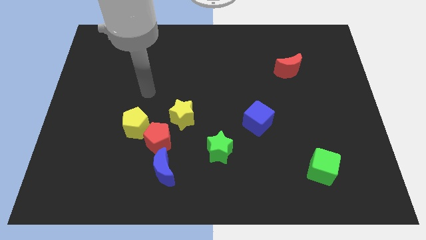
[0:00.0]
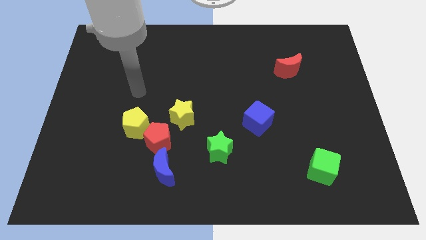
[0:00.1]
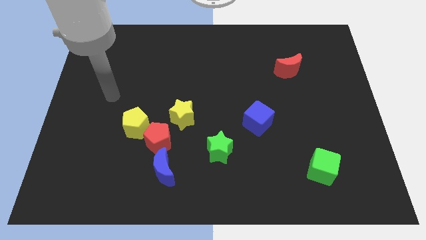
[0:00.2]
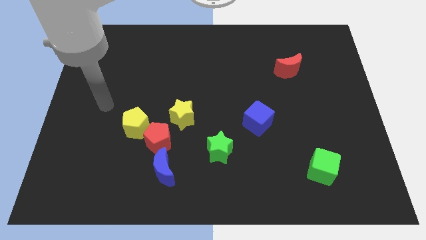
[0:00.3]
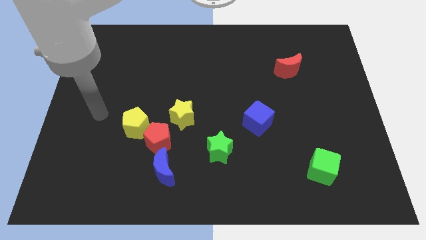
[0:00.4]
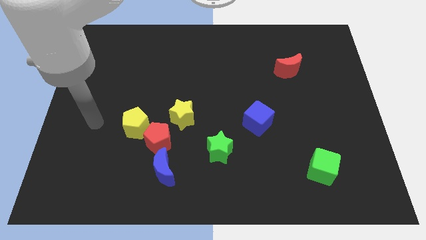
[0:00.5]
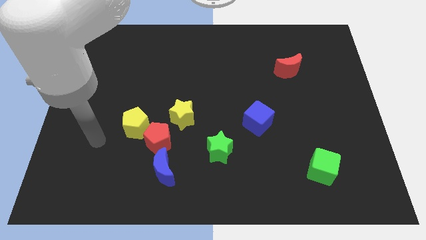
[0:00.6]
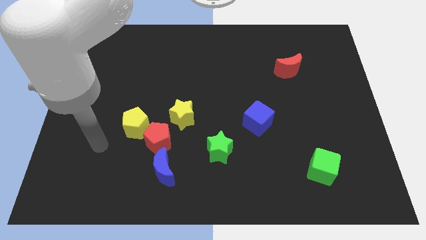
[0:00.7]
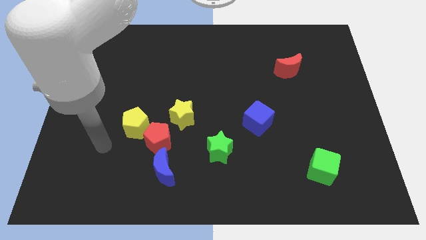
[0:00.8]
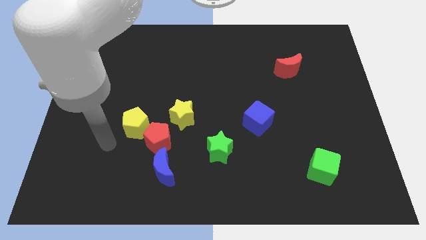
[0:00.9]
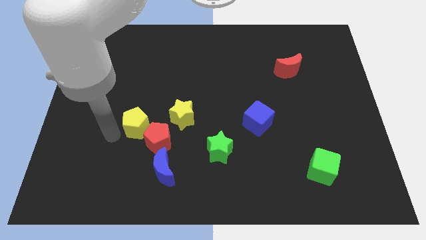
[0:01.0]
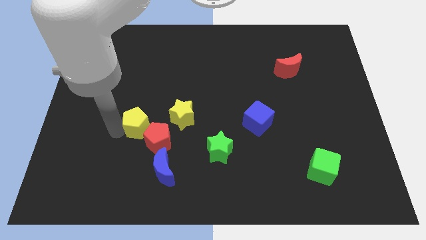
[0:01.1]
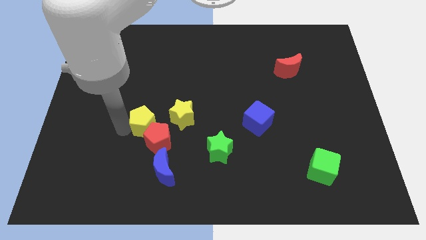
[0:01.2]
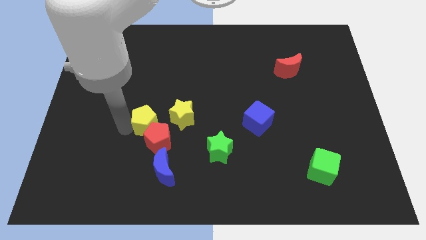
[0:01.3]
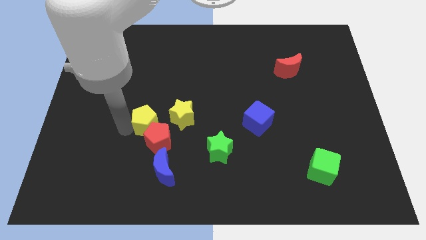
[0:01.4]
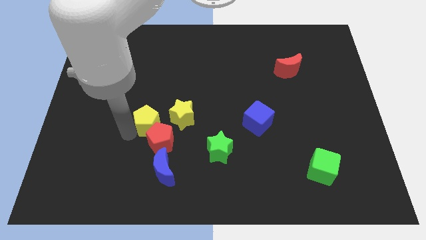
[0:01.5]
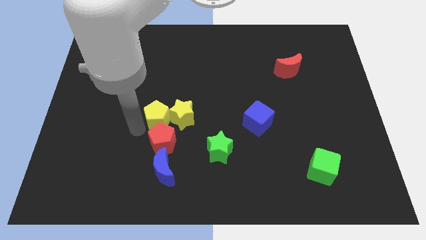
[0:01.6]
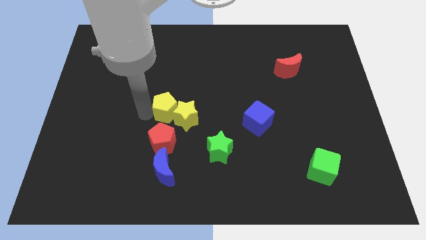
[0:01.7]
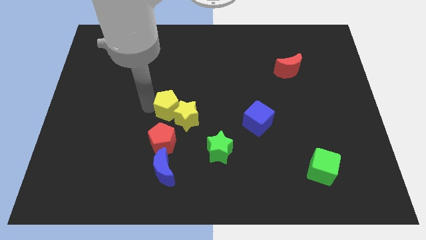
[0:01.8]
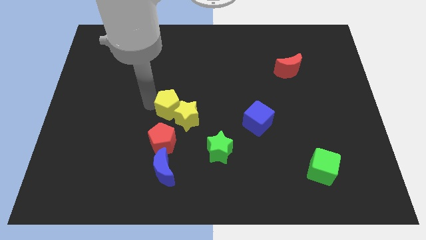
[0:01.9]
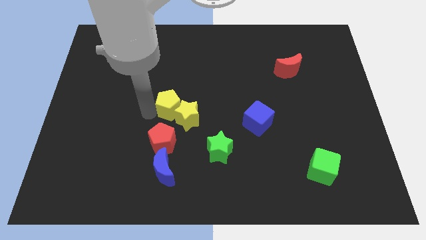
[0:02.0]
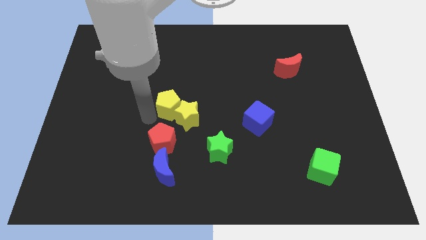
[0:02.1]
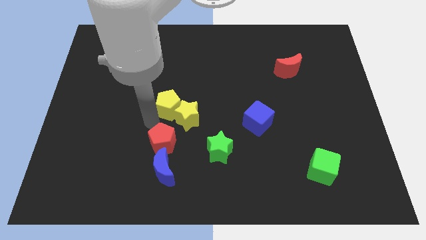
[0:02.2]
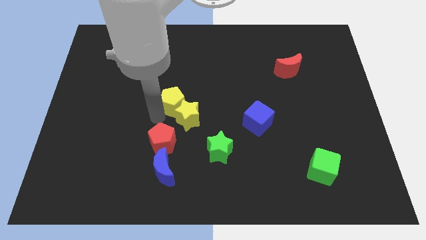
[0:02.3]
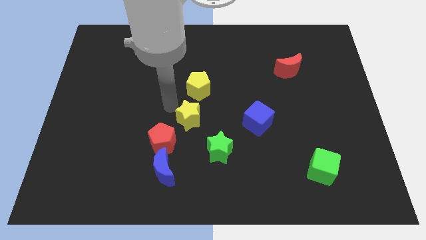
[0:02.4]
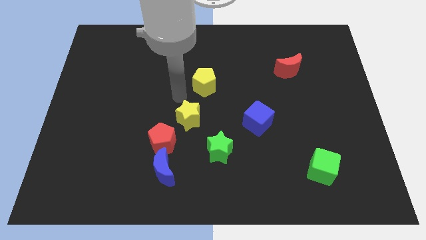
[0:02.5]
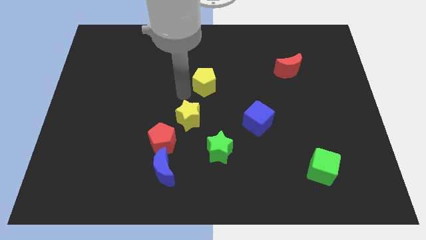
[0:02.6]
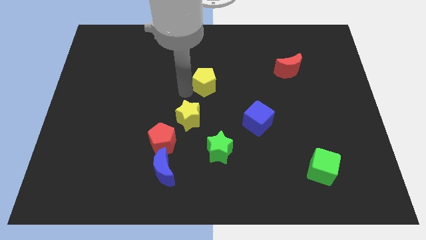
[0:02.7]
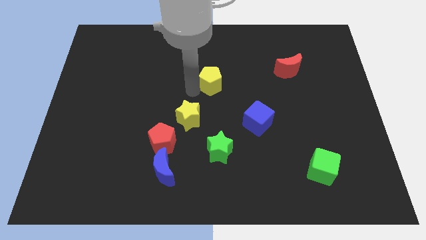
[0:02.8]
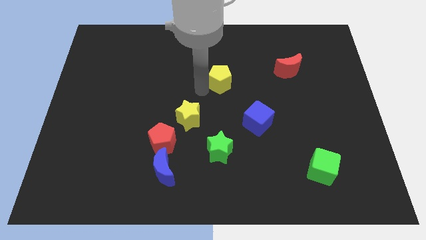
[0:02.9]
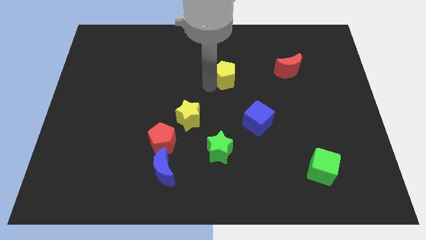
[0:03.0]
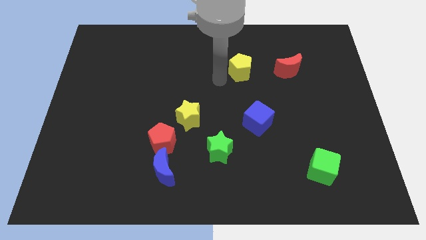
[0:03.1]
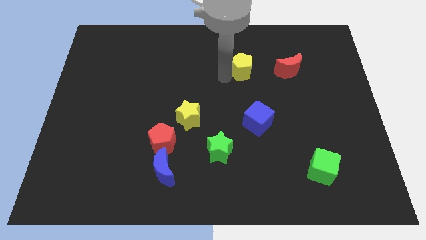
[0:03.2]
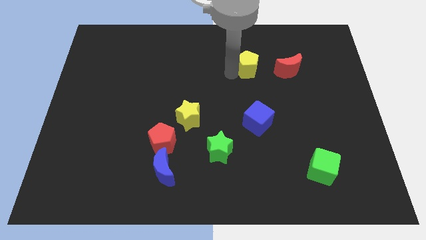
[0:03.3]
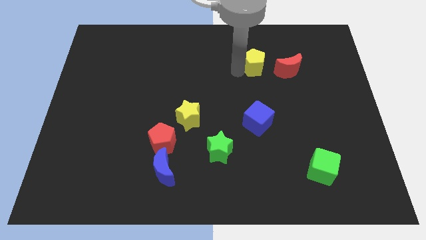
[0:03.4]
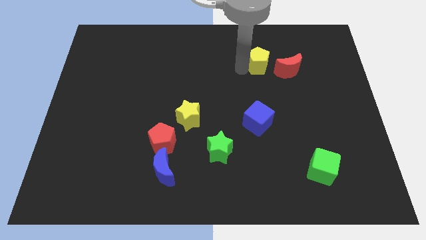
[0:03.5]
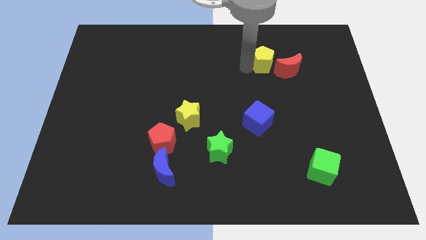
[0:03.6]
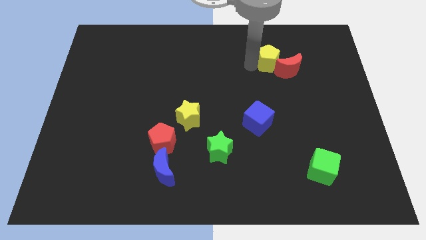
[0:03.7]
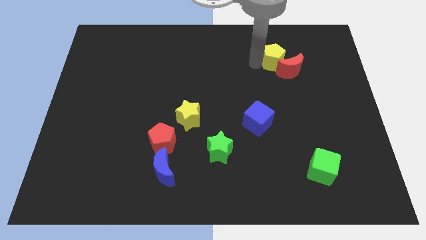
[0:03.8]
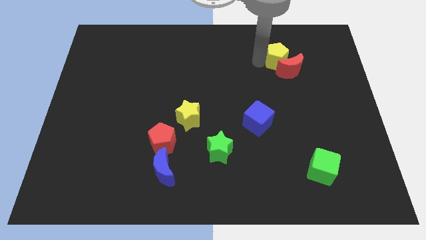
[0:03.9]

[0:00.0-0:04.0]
move the yellow pentagon to the red moon

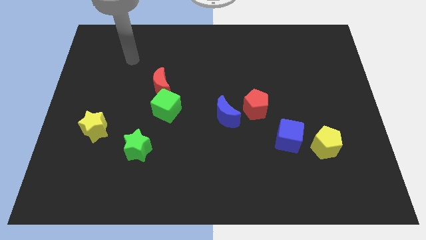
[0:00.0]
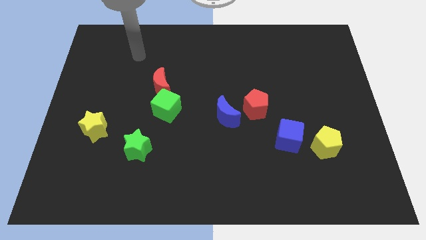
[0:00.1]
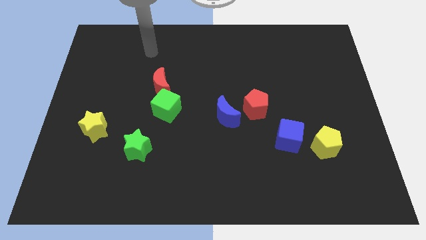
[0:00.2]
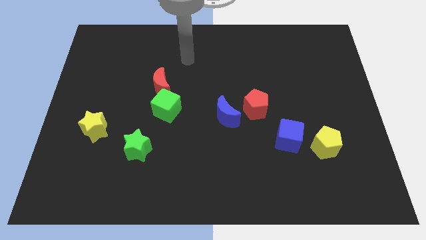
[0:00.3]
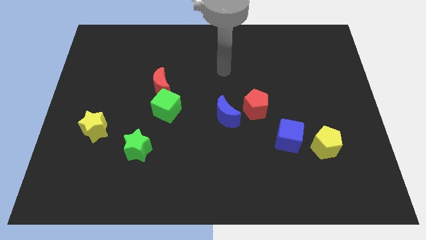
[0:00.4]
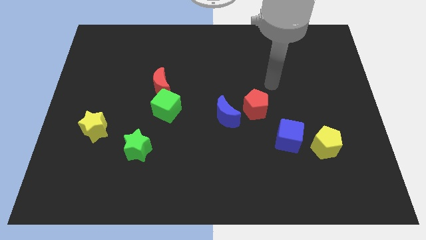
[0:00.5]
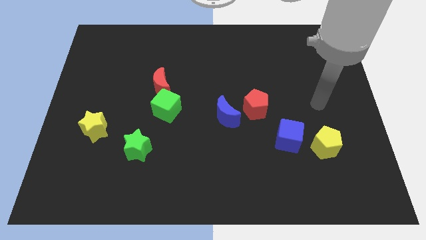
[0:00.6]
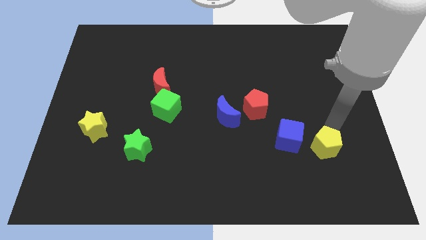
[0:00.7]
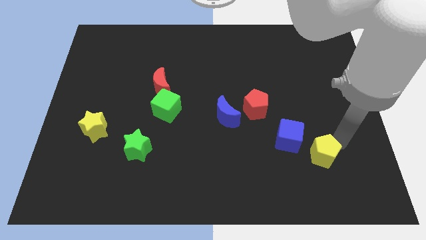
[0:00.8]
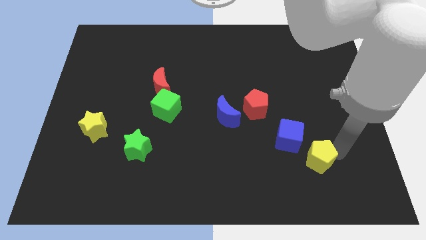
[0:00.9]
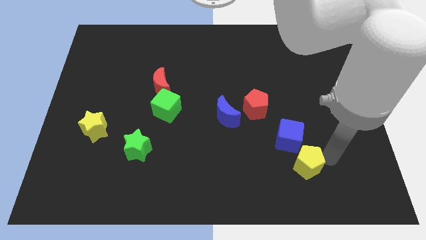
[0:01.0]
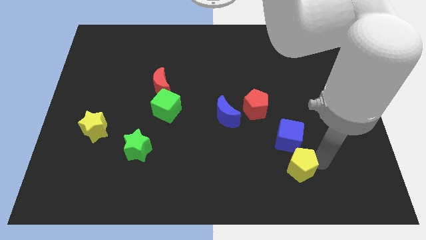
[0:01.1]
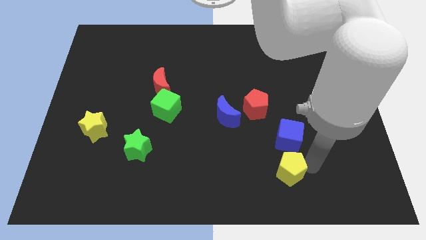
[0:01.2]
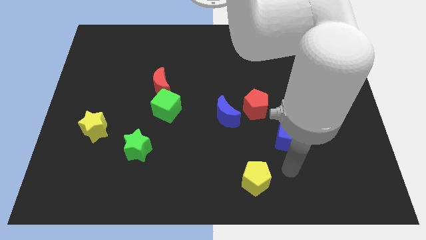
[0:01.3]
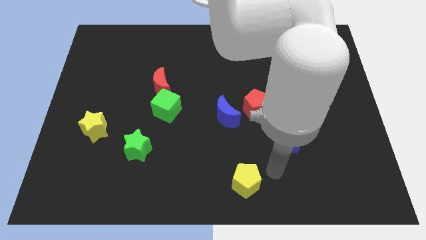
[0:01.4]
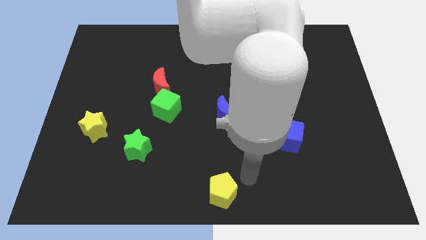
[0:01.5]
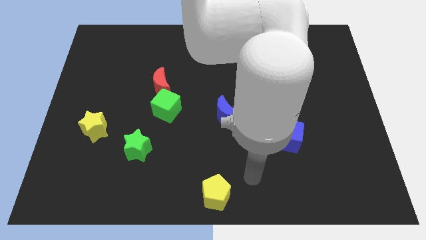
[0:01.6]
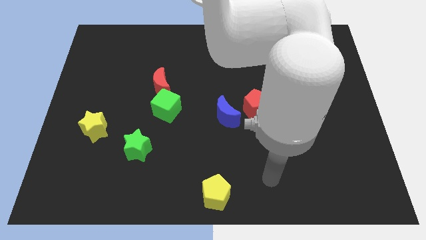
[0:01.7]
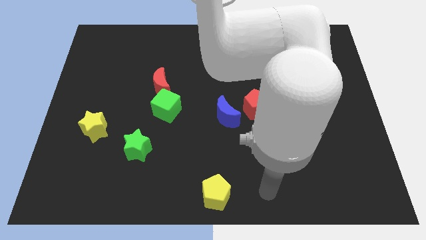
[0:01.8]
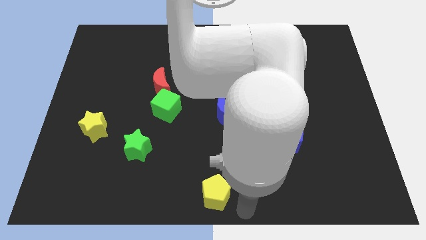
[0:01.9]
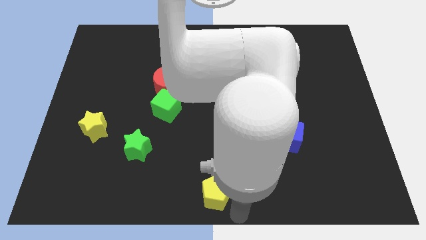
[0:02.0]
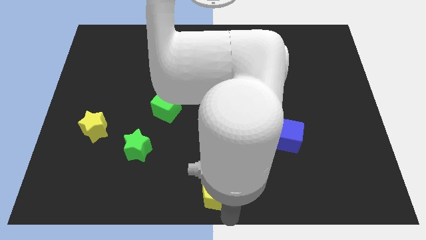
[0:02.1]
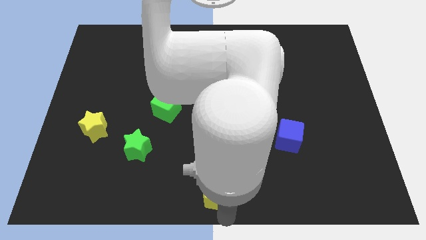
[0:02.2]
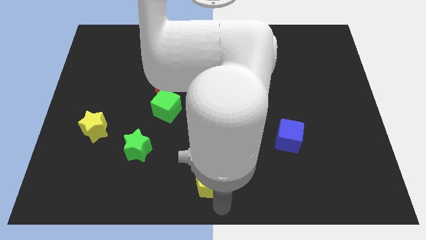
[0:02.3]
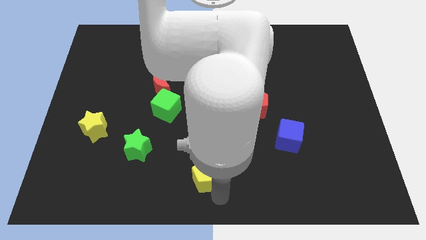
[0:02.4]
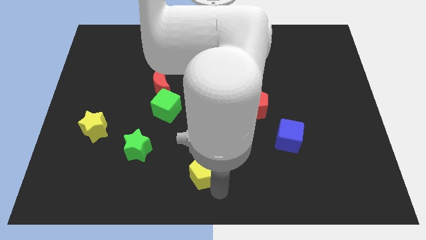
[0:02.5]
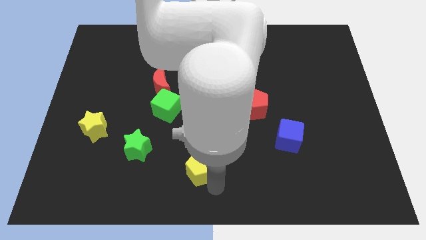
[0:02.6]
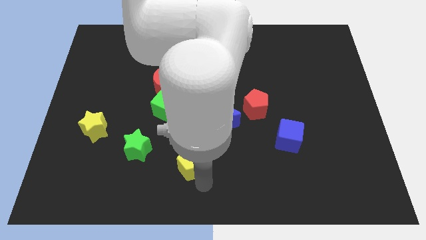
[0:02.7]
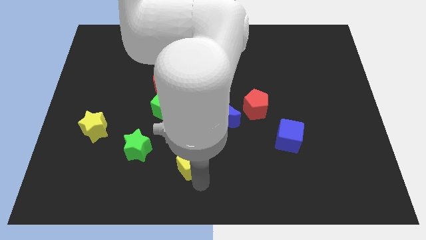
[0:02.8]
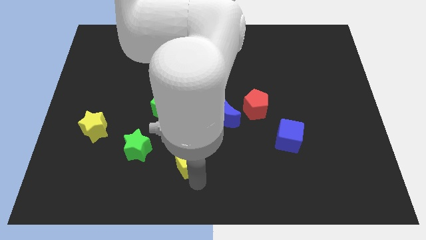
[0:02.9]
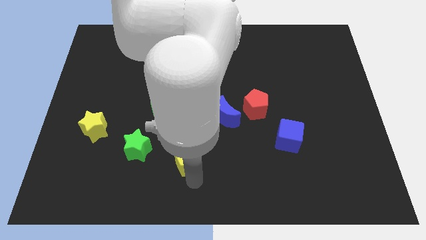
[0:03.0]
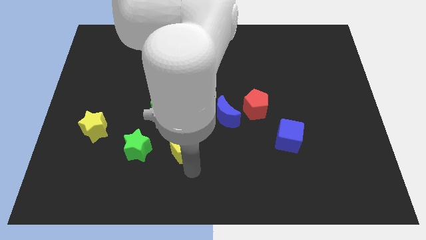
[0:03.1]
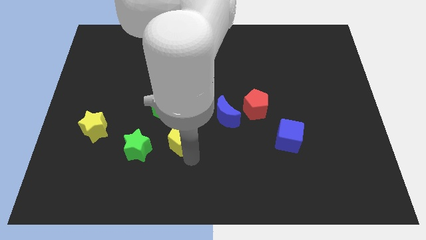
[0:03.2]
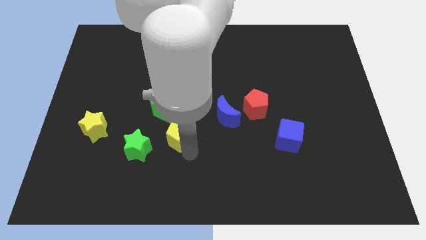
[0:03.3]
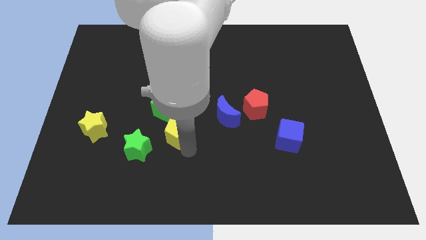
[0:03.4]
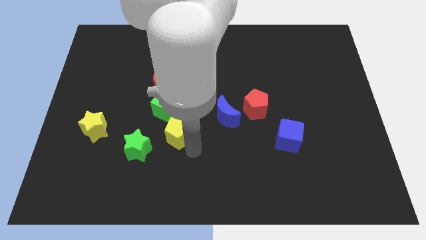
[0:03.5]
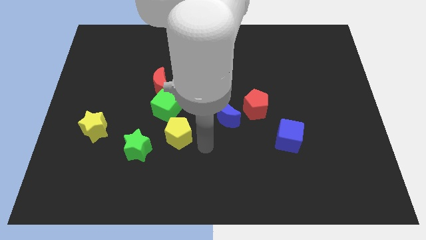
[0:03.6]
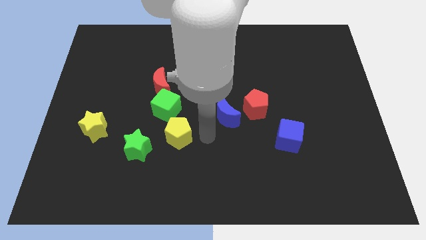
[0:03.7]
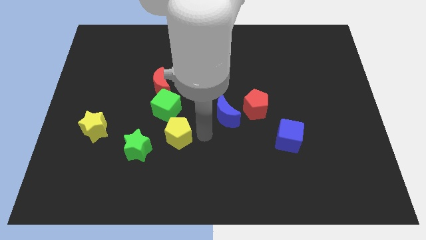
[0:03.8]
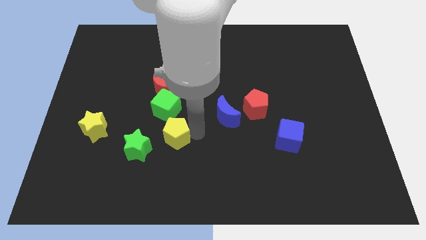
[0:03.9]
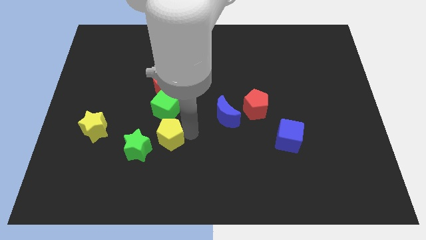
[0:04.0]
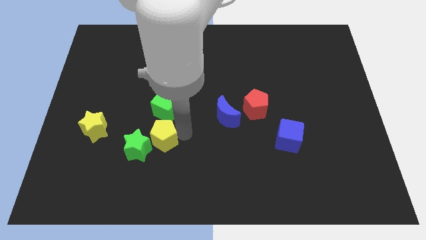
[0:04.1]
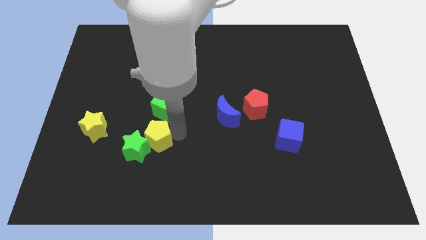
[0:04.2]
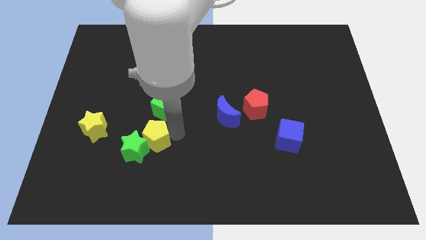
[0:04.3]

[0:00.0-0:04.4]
push the yellow pentagon to the green star
